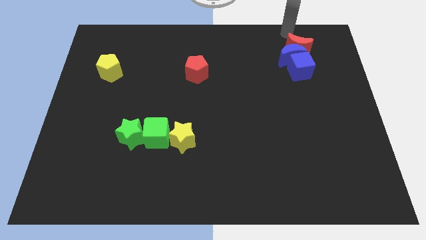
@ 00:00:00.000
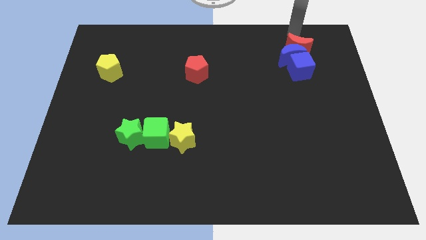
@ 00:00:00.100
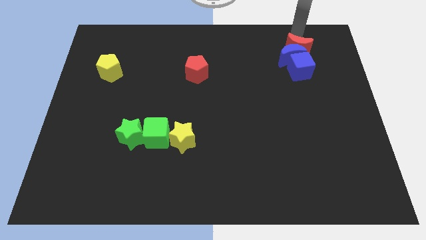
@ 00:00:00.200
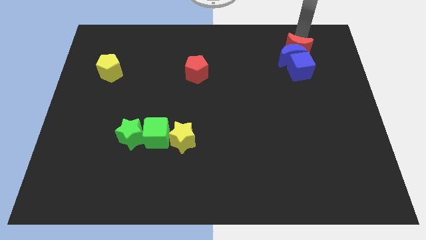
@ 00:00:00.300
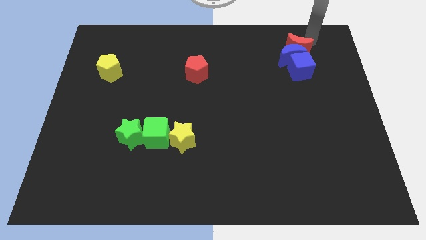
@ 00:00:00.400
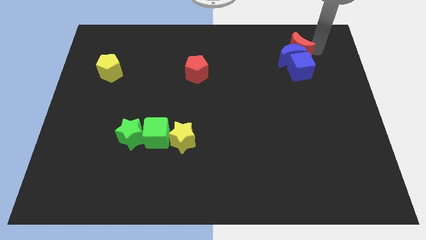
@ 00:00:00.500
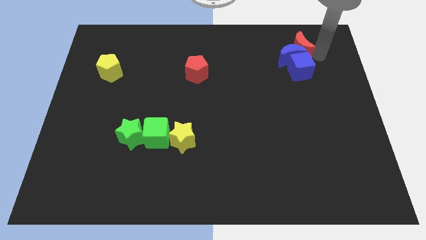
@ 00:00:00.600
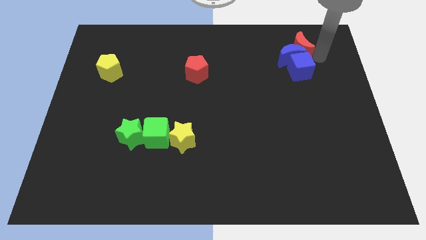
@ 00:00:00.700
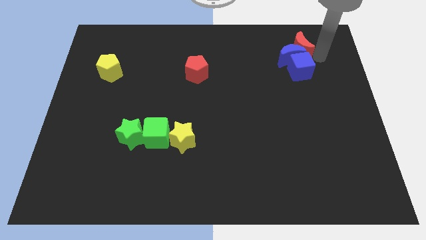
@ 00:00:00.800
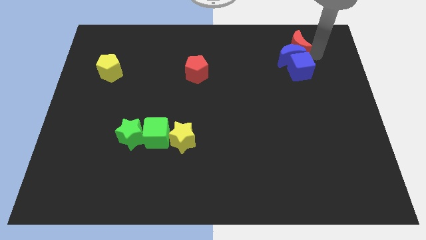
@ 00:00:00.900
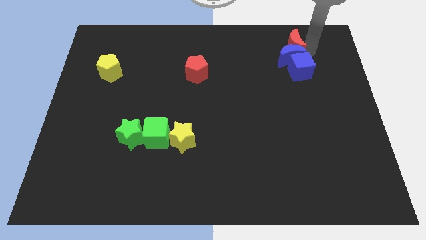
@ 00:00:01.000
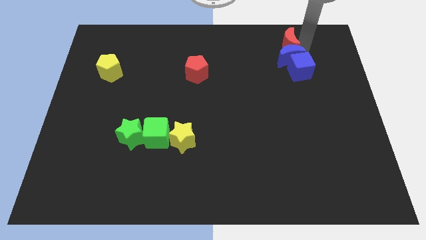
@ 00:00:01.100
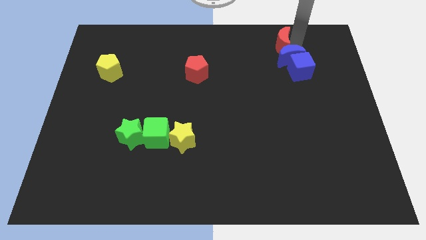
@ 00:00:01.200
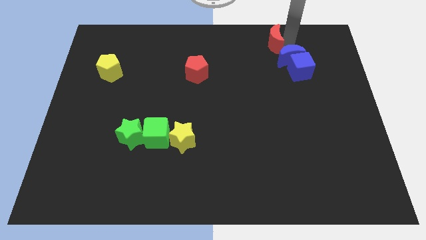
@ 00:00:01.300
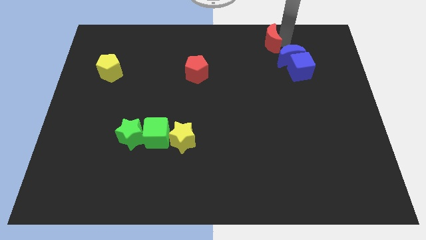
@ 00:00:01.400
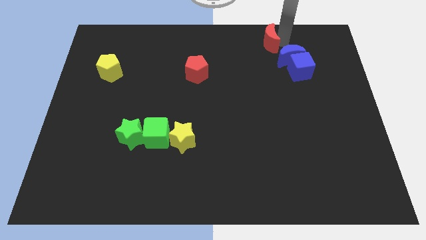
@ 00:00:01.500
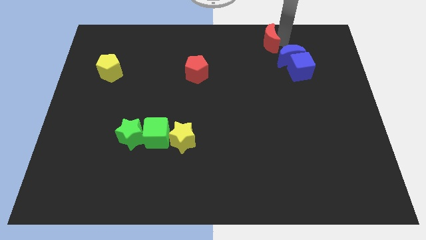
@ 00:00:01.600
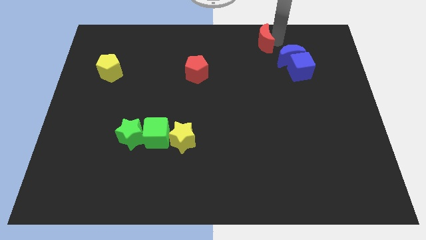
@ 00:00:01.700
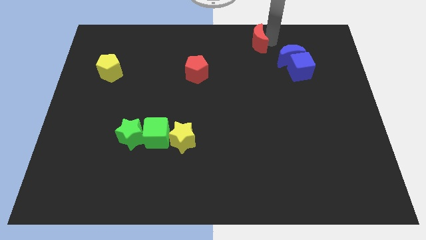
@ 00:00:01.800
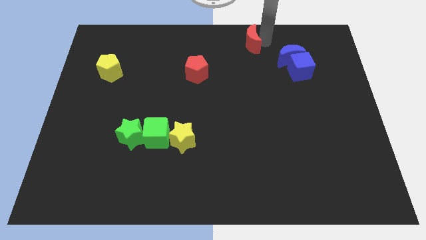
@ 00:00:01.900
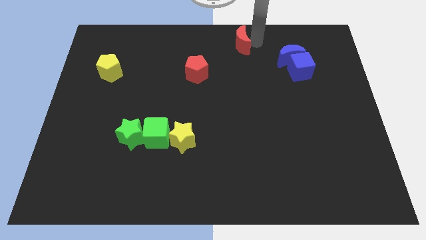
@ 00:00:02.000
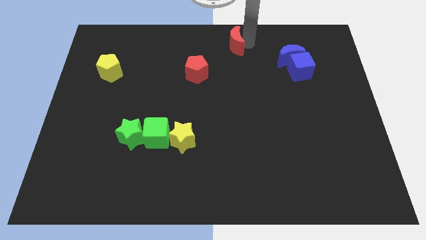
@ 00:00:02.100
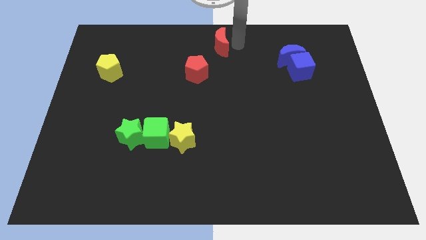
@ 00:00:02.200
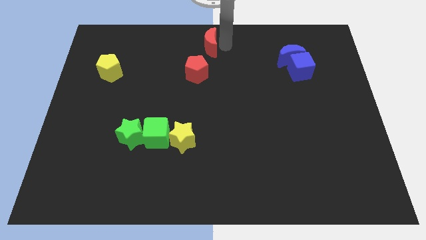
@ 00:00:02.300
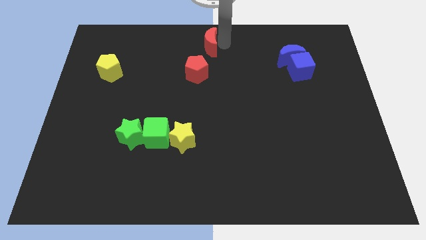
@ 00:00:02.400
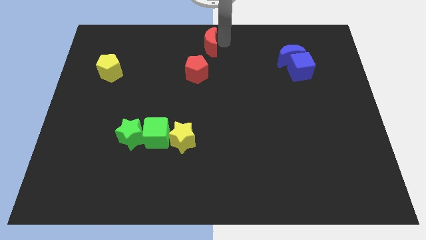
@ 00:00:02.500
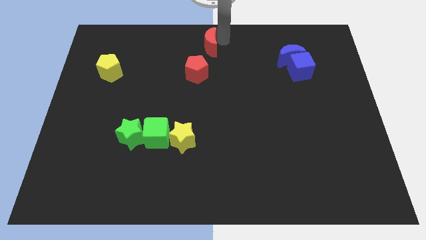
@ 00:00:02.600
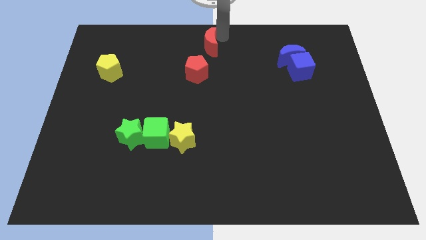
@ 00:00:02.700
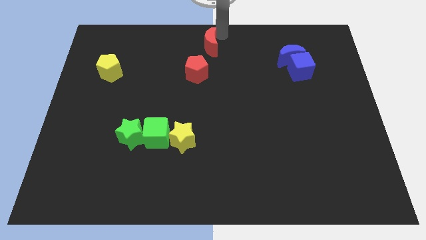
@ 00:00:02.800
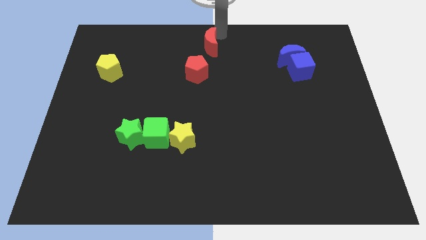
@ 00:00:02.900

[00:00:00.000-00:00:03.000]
move the red crescent to the top right of the red pentagon

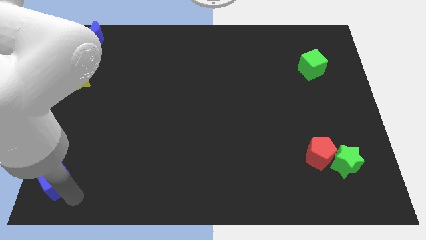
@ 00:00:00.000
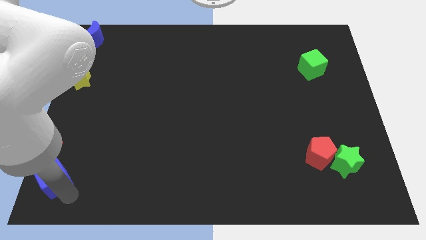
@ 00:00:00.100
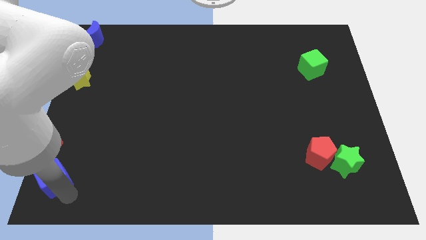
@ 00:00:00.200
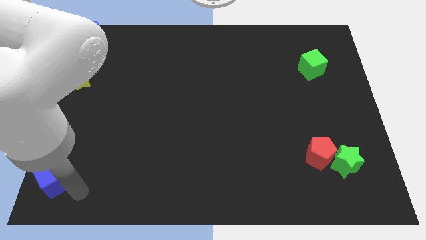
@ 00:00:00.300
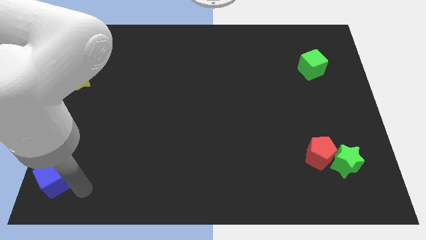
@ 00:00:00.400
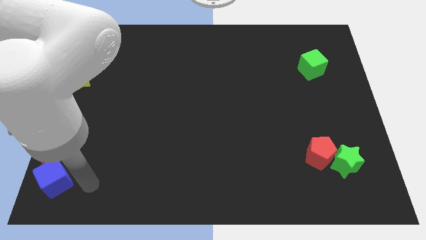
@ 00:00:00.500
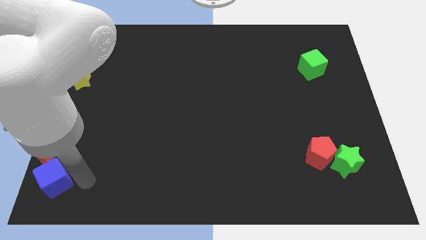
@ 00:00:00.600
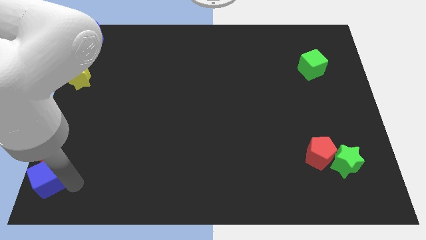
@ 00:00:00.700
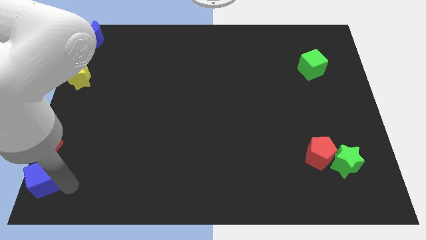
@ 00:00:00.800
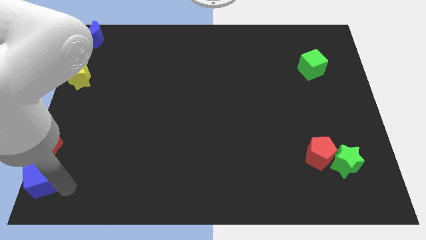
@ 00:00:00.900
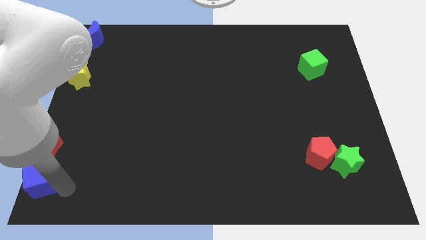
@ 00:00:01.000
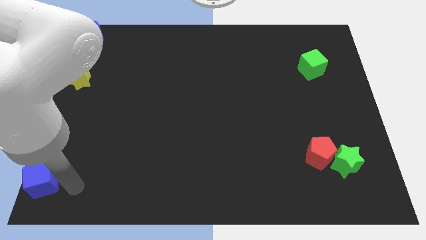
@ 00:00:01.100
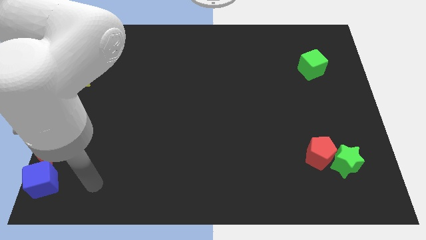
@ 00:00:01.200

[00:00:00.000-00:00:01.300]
put the blue cube below the red moon

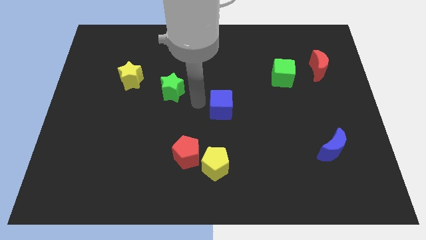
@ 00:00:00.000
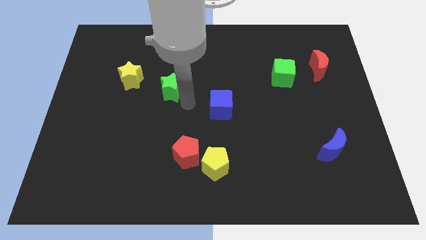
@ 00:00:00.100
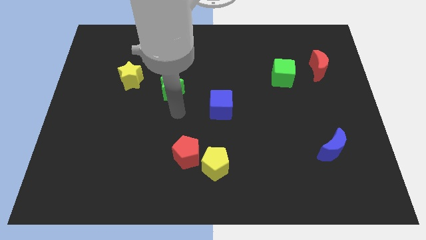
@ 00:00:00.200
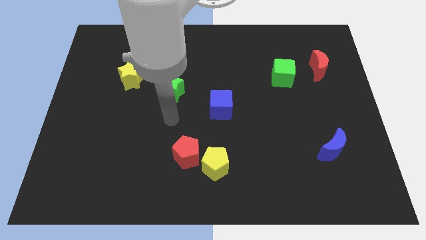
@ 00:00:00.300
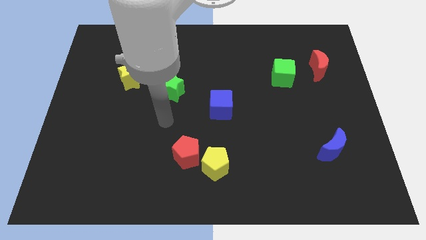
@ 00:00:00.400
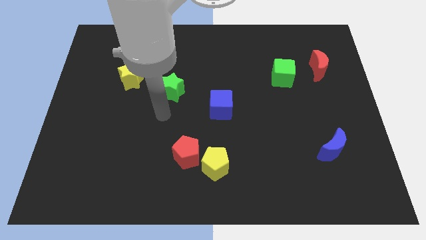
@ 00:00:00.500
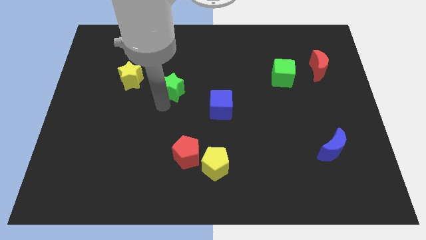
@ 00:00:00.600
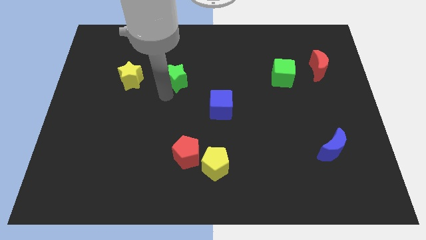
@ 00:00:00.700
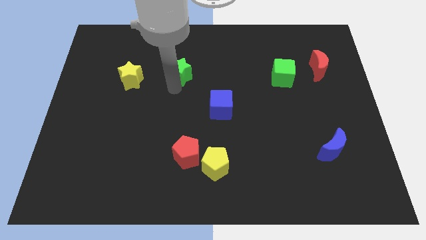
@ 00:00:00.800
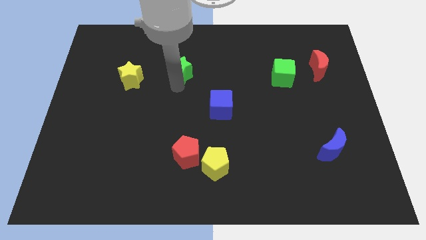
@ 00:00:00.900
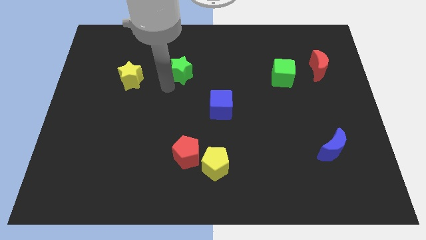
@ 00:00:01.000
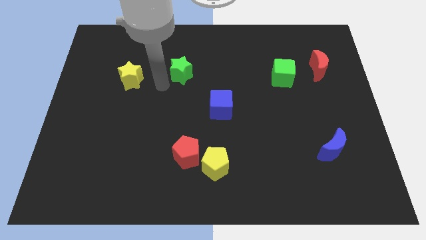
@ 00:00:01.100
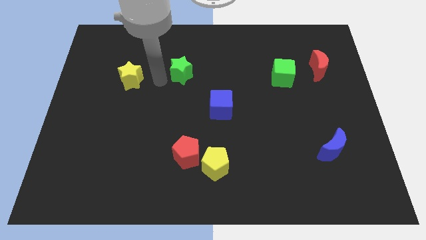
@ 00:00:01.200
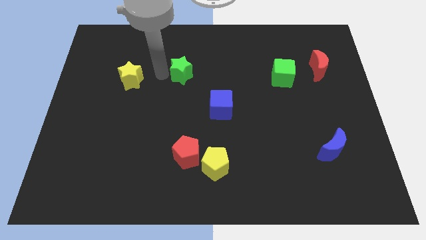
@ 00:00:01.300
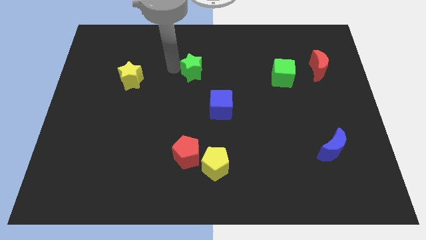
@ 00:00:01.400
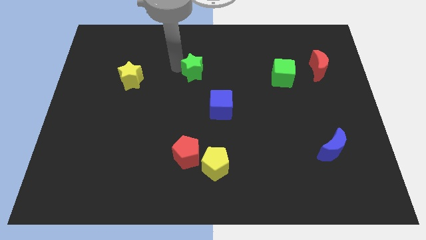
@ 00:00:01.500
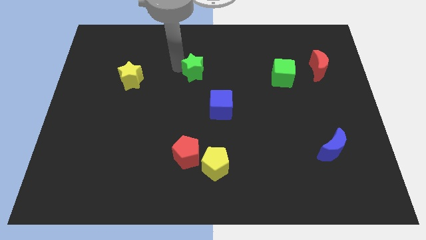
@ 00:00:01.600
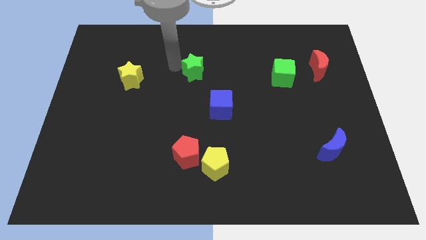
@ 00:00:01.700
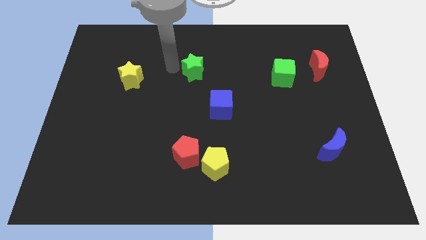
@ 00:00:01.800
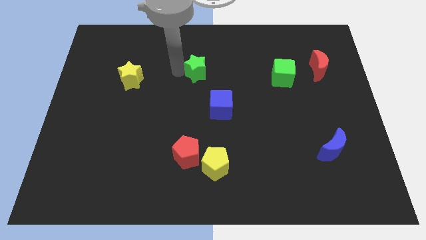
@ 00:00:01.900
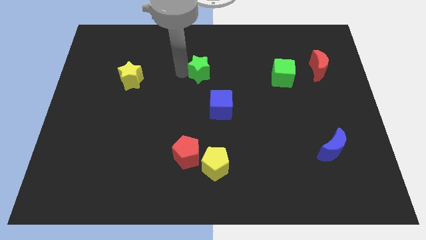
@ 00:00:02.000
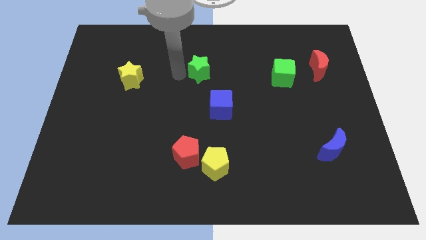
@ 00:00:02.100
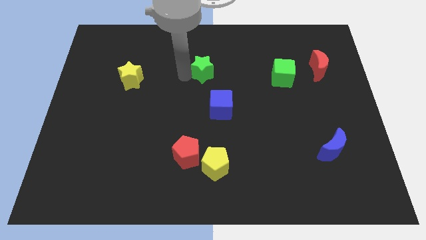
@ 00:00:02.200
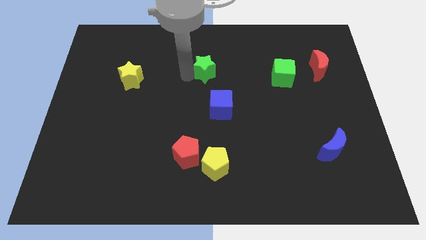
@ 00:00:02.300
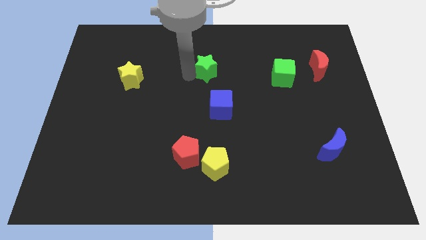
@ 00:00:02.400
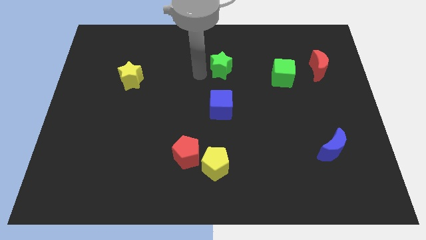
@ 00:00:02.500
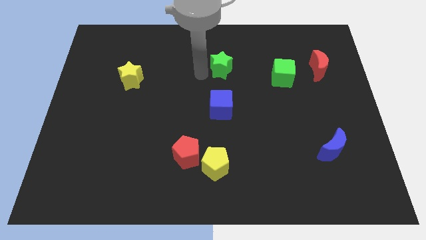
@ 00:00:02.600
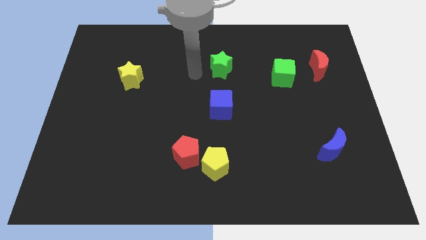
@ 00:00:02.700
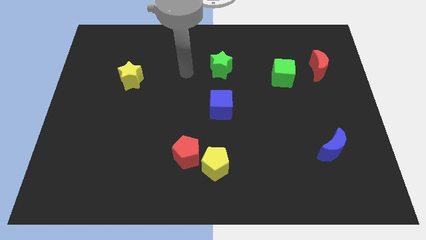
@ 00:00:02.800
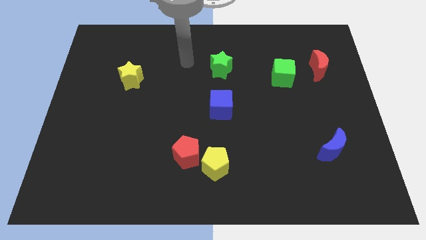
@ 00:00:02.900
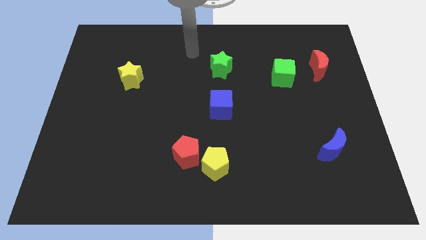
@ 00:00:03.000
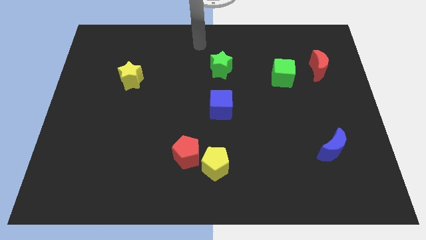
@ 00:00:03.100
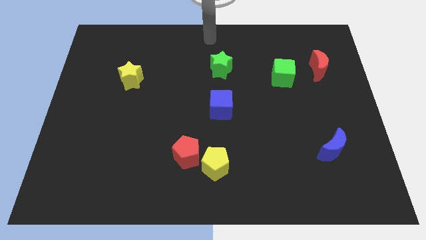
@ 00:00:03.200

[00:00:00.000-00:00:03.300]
push the green star above the blue cube

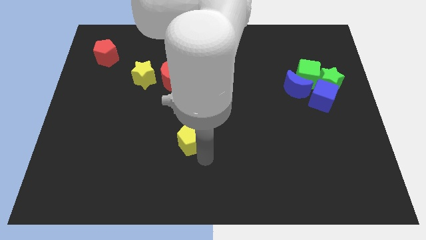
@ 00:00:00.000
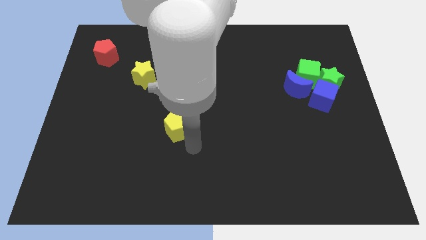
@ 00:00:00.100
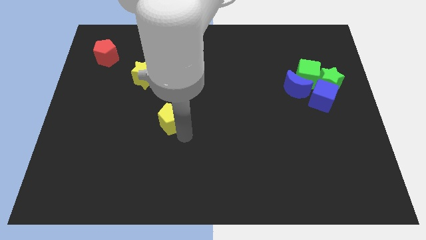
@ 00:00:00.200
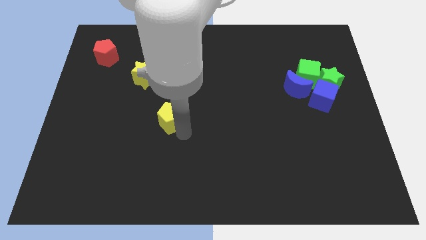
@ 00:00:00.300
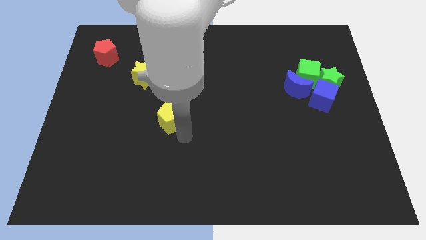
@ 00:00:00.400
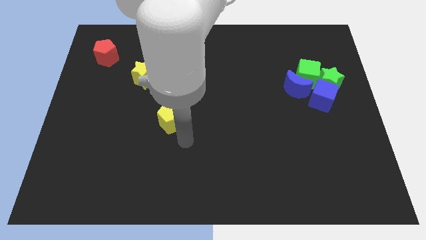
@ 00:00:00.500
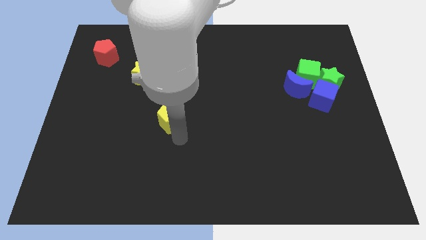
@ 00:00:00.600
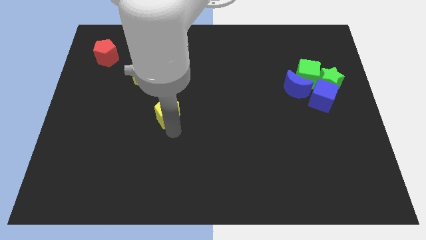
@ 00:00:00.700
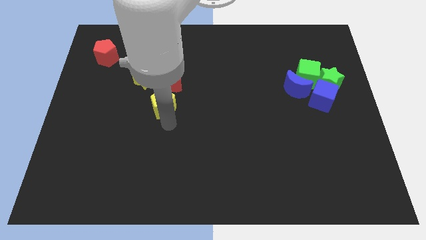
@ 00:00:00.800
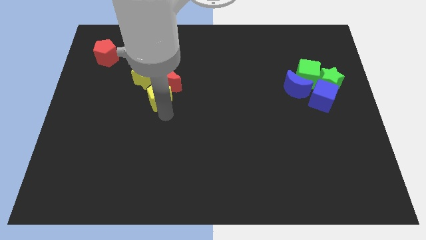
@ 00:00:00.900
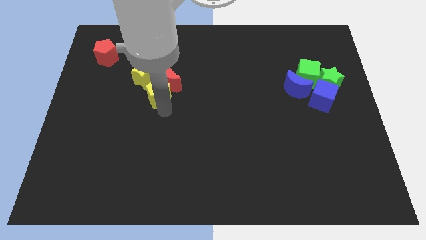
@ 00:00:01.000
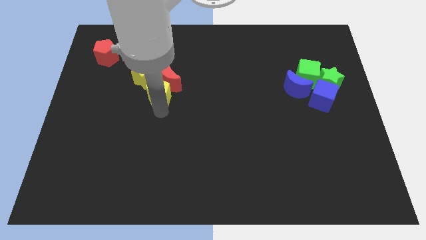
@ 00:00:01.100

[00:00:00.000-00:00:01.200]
place the yellow pentagon at the bottom of yellow star

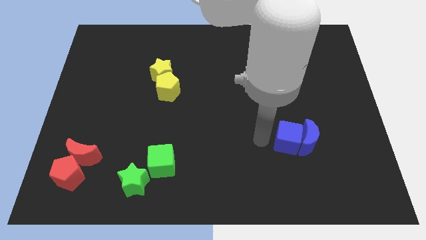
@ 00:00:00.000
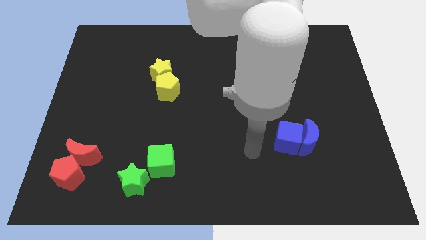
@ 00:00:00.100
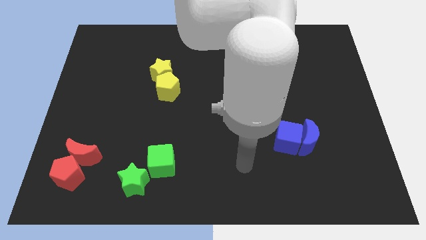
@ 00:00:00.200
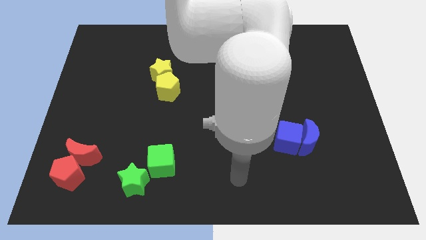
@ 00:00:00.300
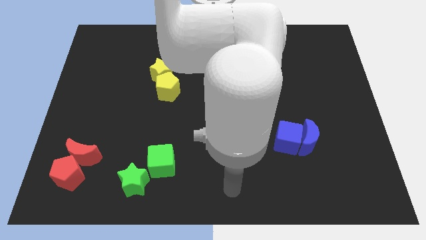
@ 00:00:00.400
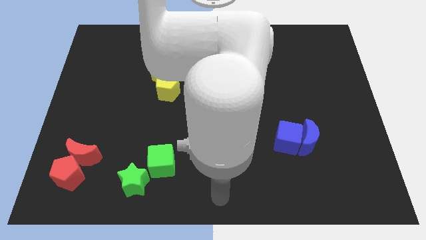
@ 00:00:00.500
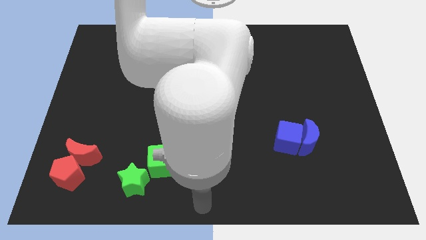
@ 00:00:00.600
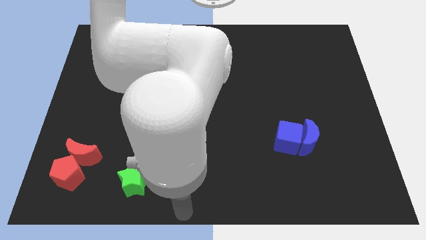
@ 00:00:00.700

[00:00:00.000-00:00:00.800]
move the arm towards the bottom centre of the board
